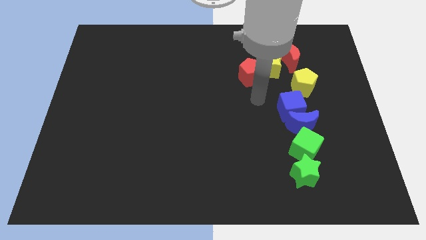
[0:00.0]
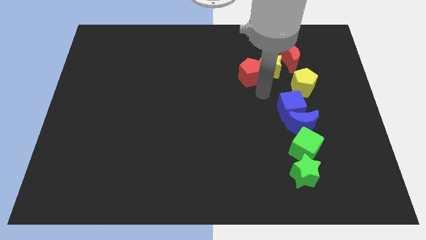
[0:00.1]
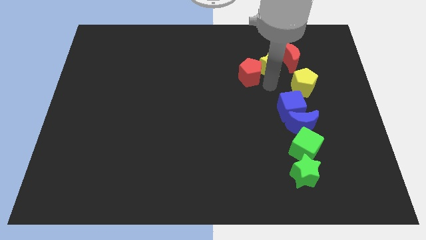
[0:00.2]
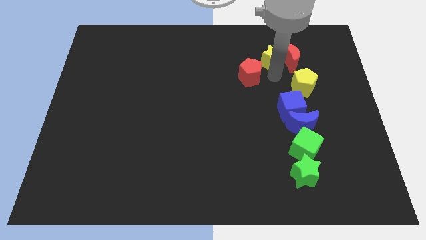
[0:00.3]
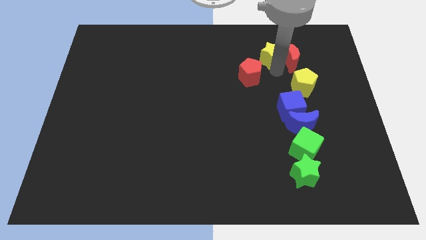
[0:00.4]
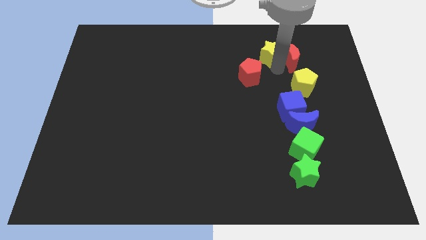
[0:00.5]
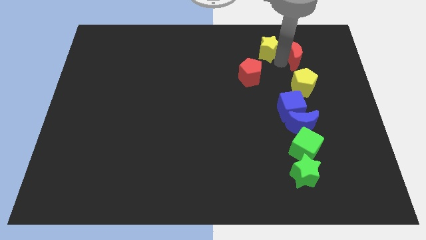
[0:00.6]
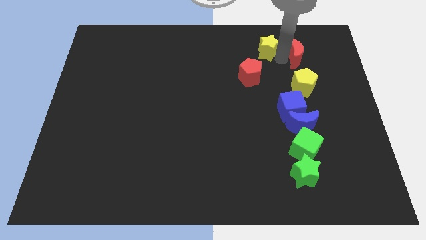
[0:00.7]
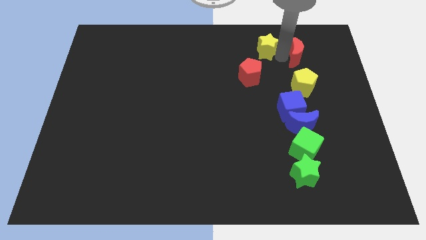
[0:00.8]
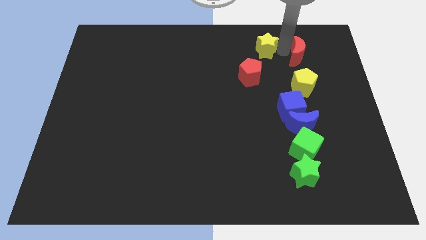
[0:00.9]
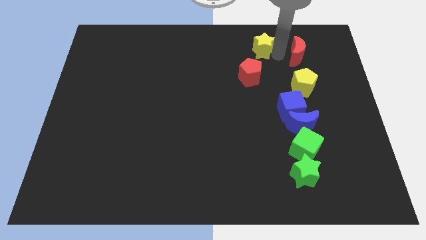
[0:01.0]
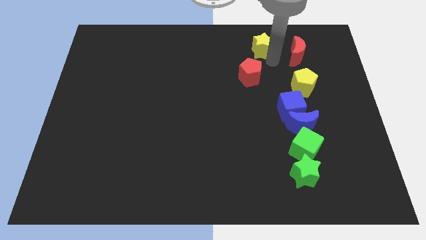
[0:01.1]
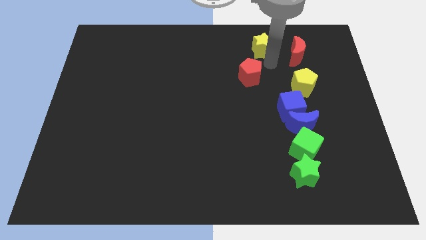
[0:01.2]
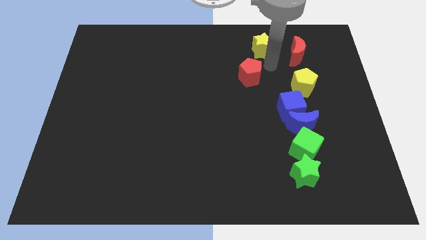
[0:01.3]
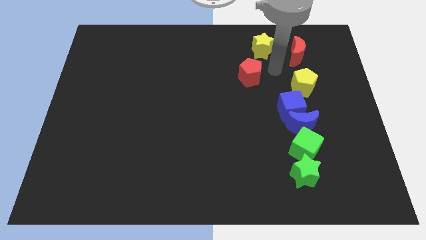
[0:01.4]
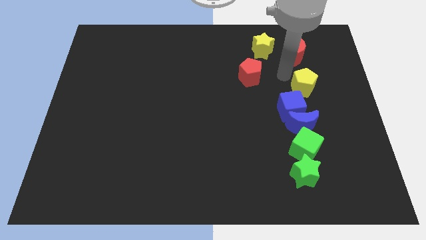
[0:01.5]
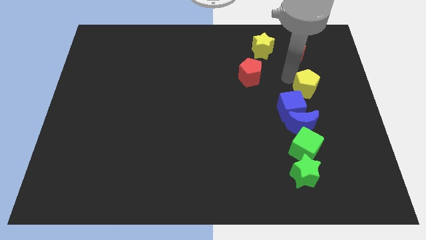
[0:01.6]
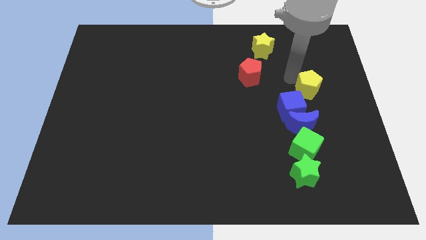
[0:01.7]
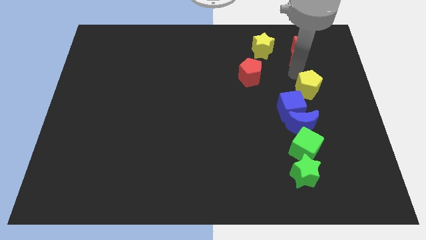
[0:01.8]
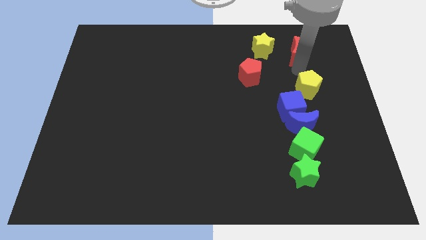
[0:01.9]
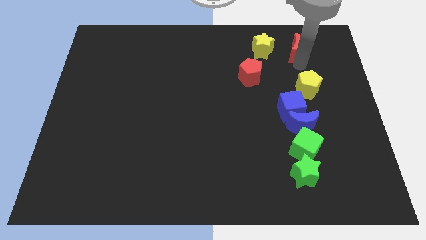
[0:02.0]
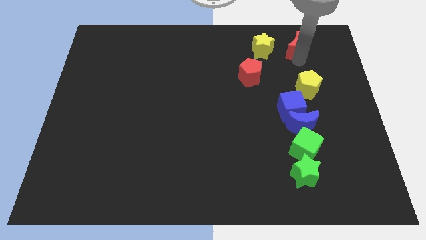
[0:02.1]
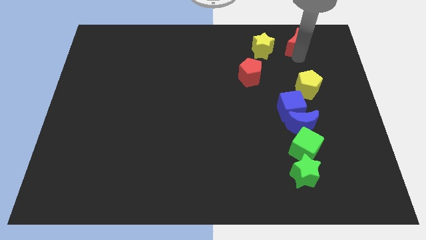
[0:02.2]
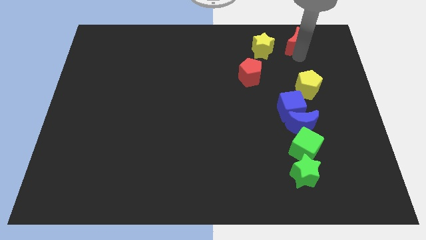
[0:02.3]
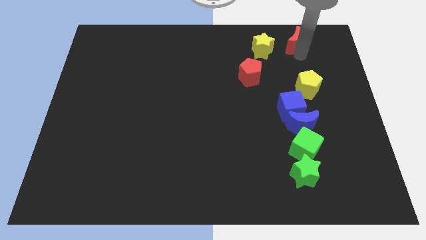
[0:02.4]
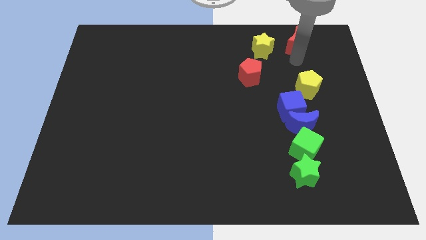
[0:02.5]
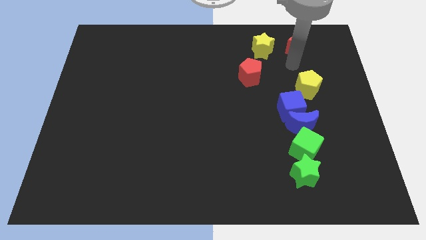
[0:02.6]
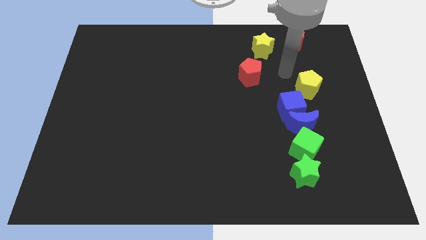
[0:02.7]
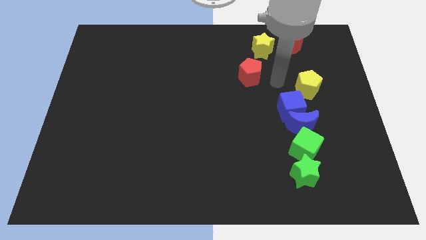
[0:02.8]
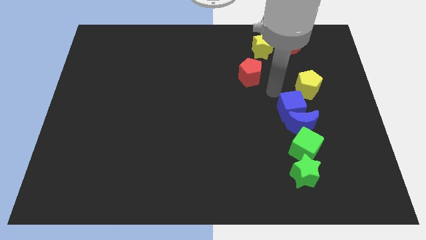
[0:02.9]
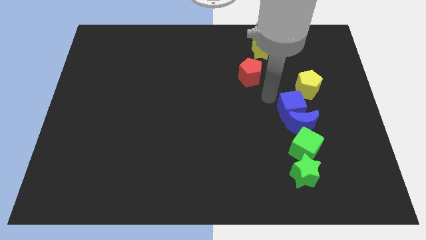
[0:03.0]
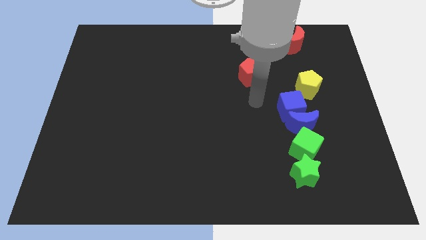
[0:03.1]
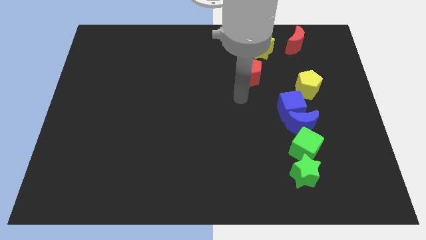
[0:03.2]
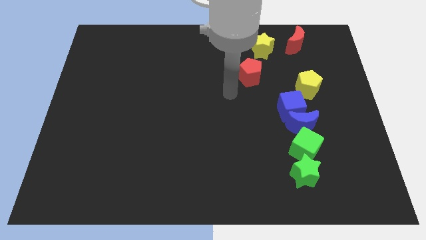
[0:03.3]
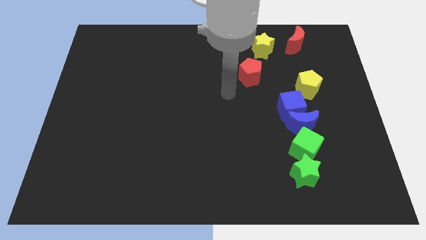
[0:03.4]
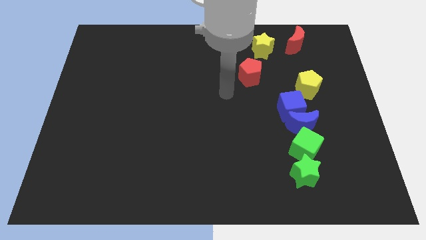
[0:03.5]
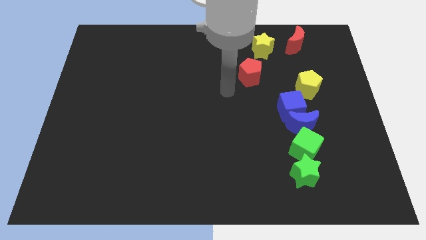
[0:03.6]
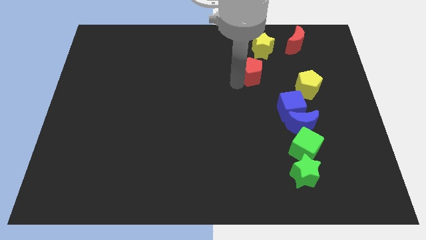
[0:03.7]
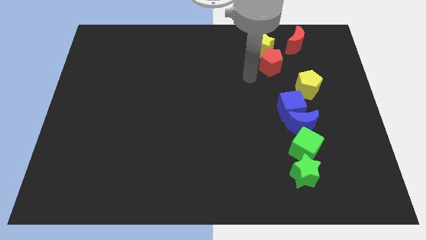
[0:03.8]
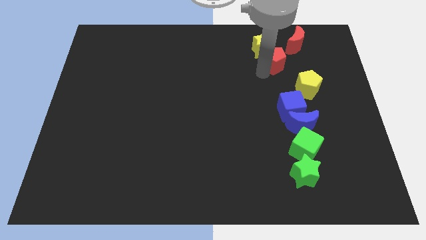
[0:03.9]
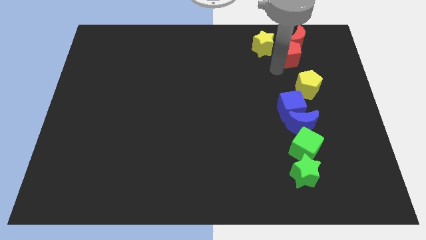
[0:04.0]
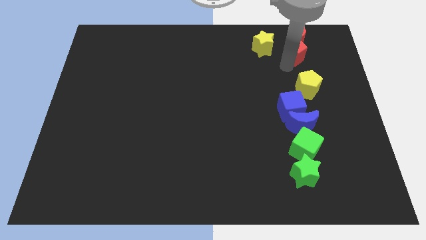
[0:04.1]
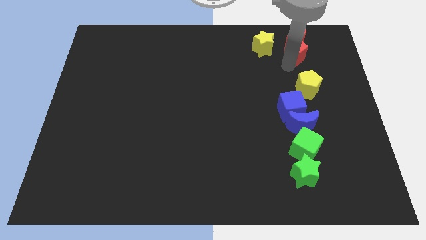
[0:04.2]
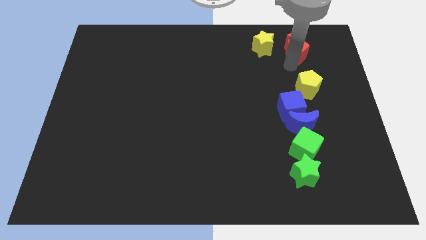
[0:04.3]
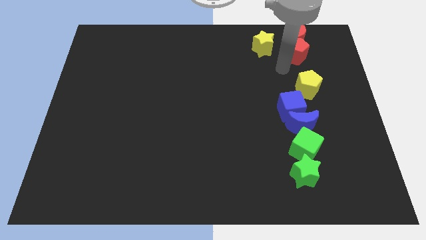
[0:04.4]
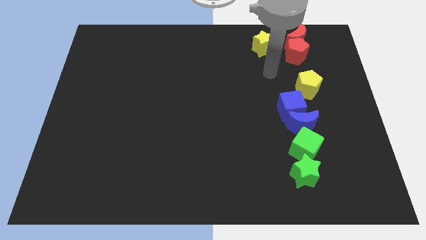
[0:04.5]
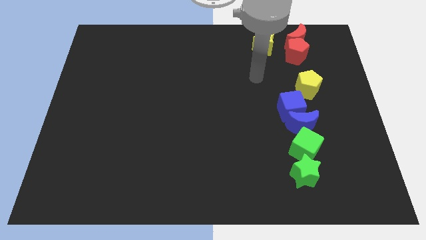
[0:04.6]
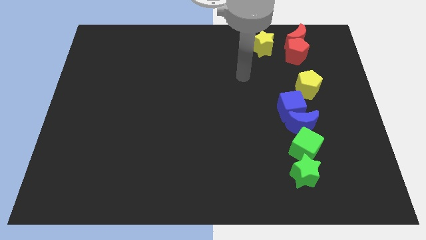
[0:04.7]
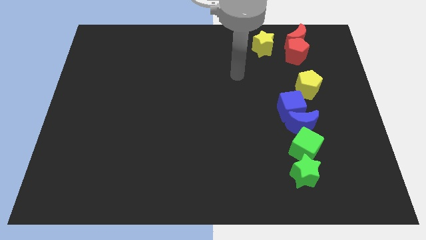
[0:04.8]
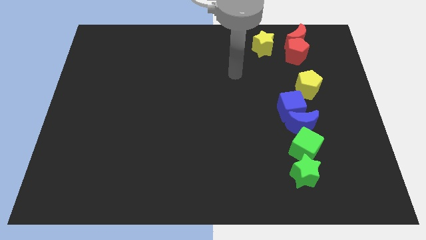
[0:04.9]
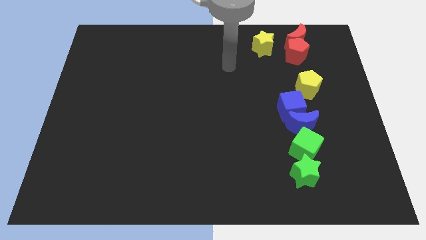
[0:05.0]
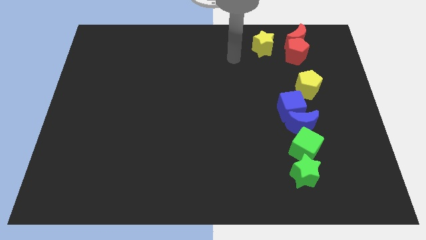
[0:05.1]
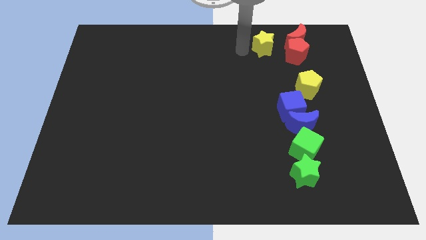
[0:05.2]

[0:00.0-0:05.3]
group up the red objects at the top right of the table

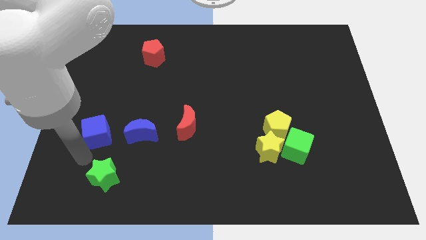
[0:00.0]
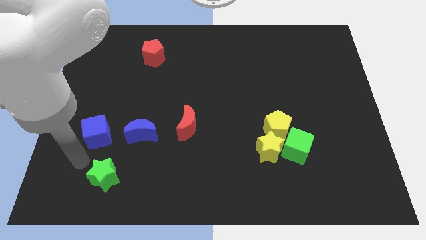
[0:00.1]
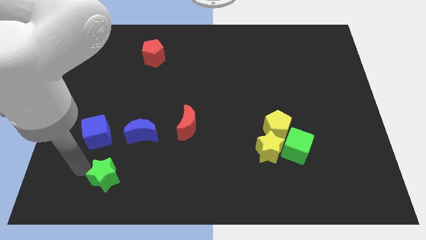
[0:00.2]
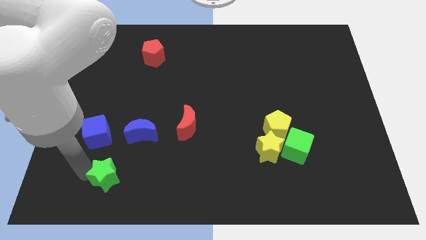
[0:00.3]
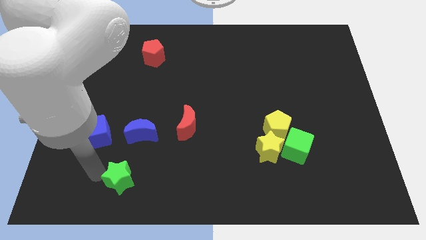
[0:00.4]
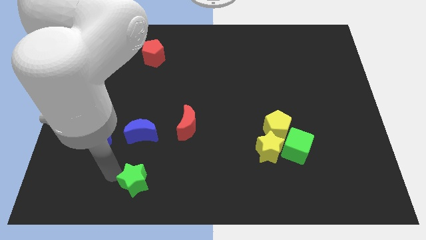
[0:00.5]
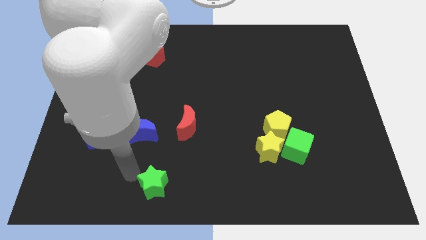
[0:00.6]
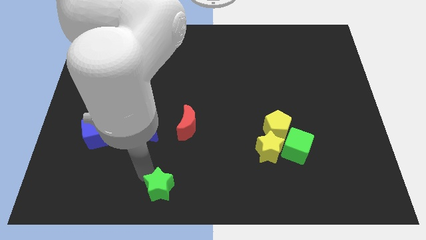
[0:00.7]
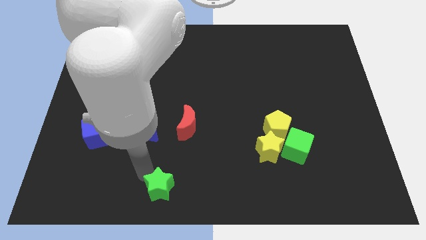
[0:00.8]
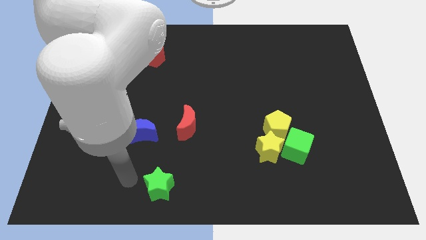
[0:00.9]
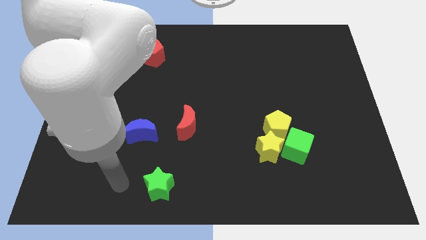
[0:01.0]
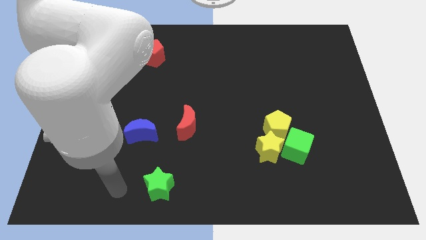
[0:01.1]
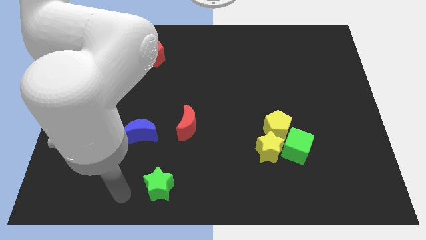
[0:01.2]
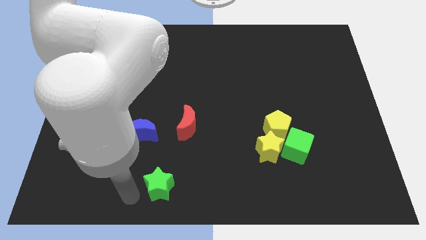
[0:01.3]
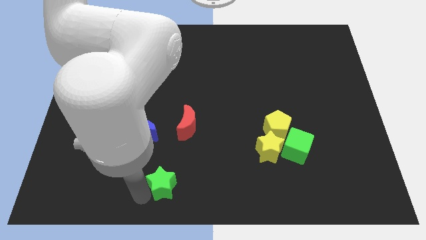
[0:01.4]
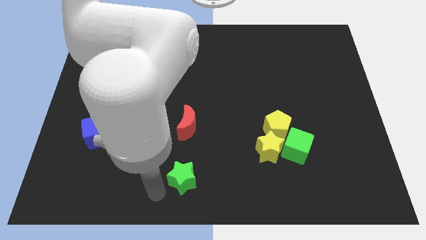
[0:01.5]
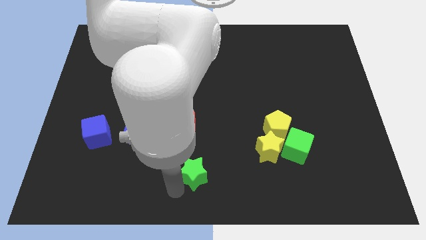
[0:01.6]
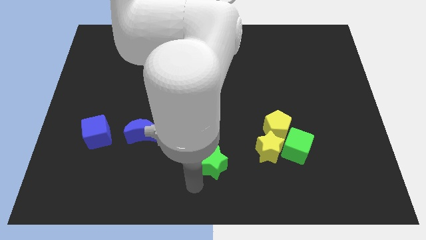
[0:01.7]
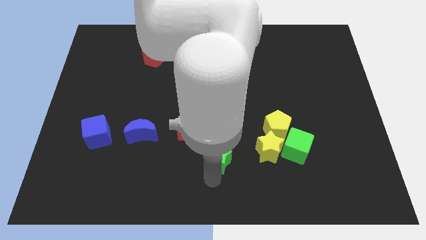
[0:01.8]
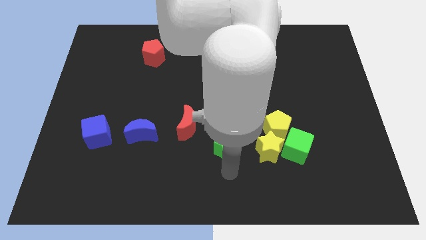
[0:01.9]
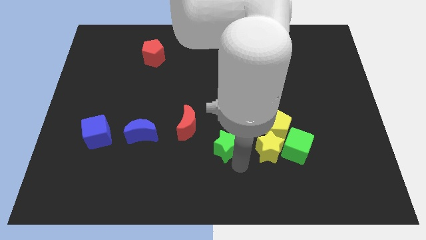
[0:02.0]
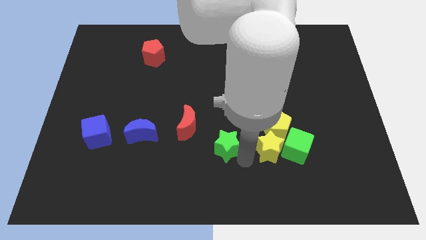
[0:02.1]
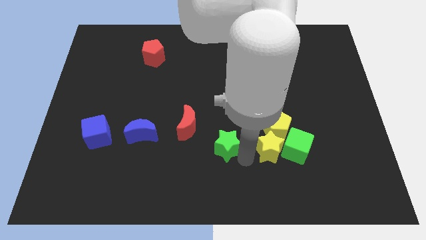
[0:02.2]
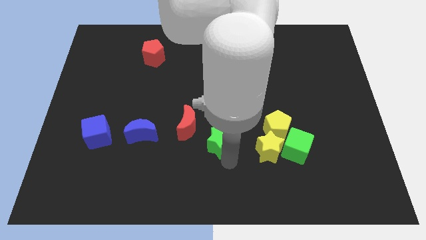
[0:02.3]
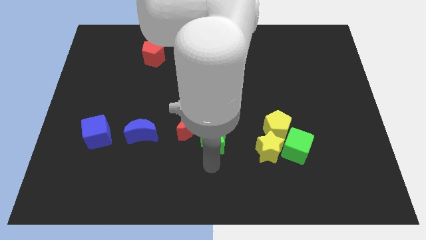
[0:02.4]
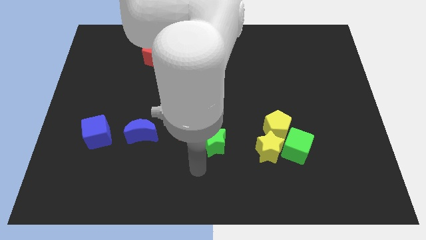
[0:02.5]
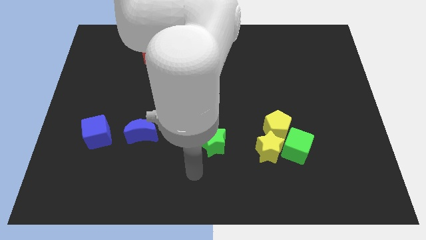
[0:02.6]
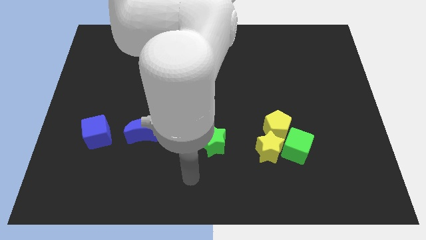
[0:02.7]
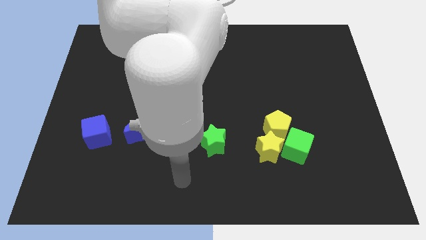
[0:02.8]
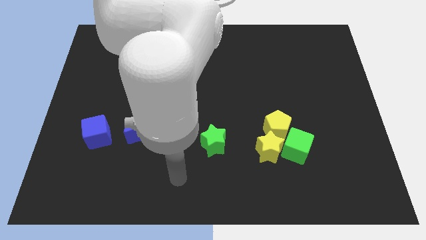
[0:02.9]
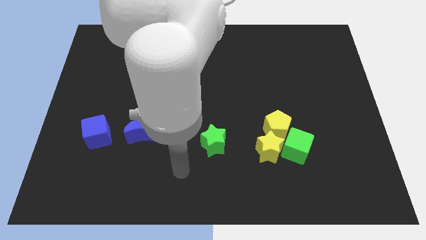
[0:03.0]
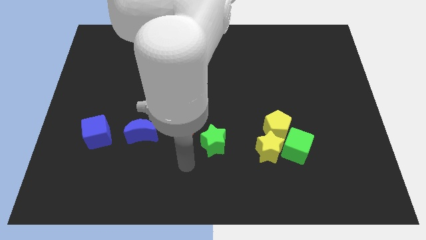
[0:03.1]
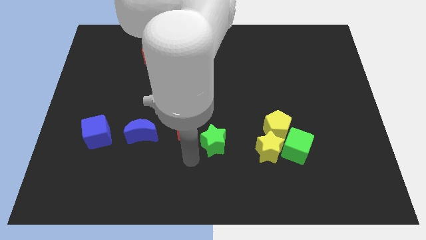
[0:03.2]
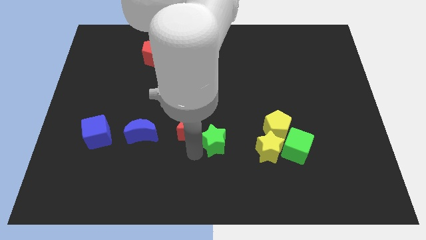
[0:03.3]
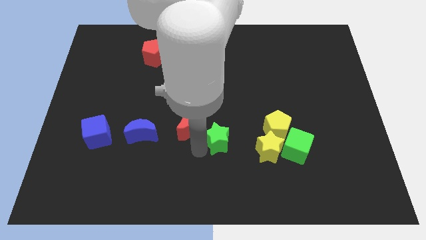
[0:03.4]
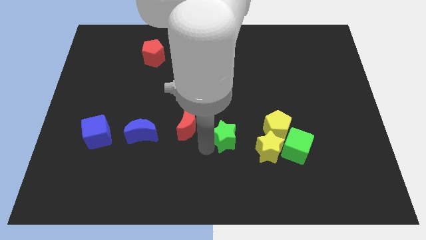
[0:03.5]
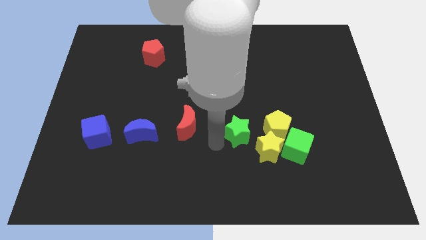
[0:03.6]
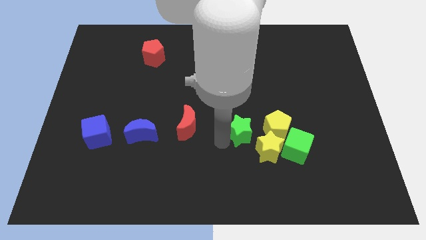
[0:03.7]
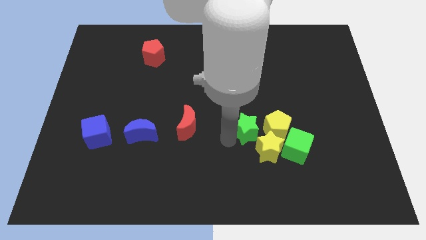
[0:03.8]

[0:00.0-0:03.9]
move the green star to the left of the yellow blocks
